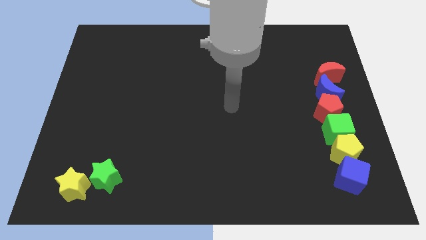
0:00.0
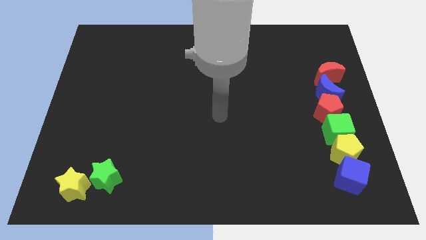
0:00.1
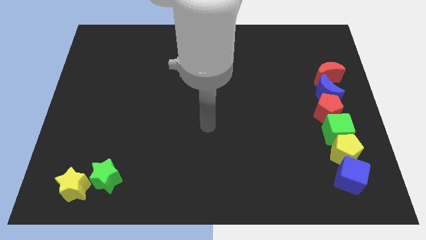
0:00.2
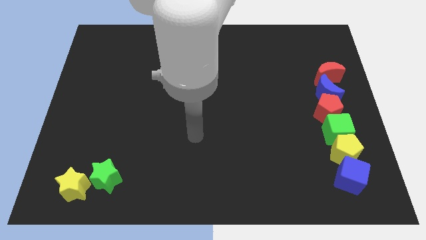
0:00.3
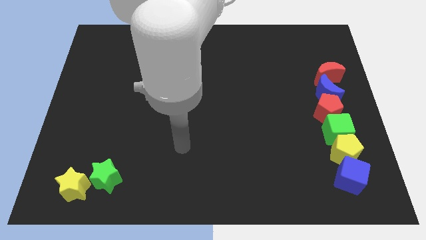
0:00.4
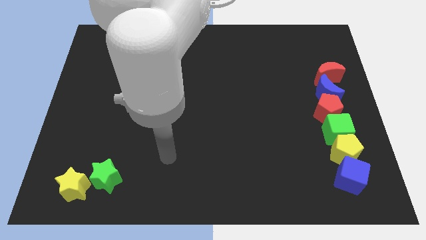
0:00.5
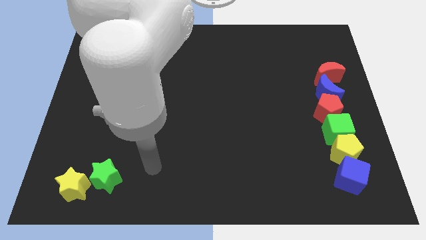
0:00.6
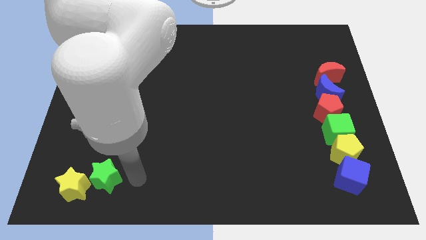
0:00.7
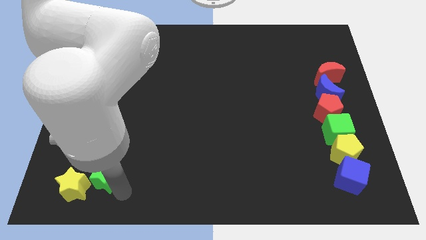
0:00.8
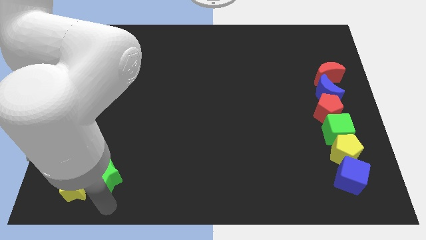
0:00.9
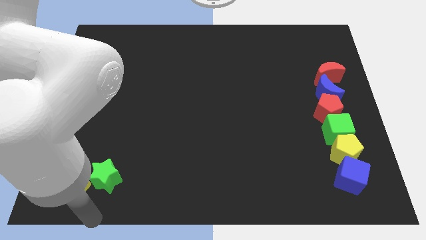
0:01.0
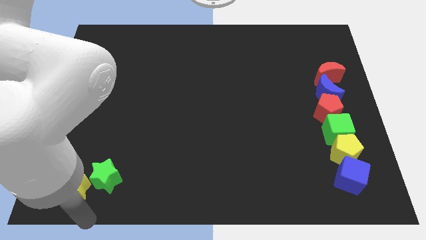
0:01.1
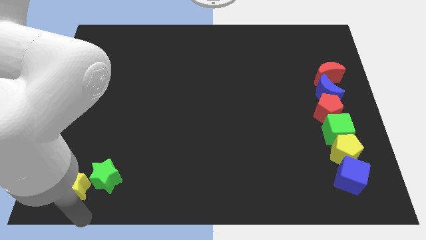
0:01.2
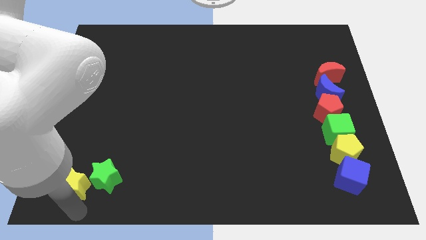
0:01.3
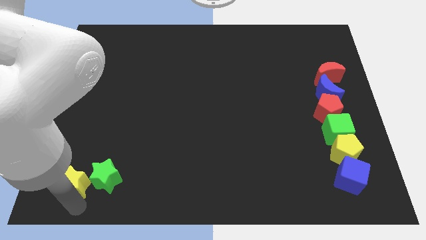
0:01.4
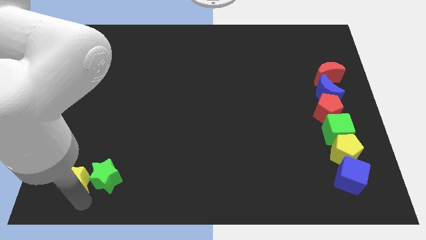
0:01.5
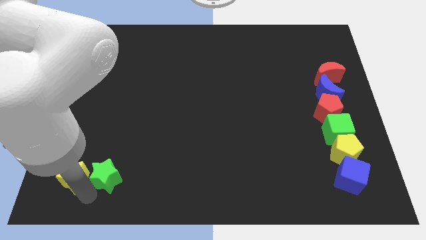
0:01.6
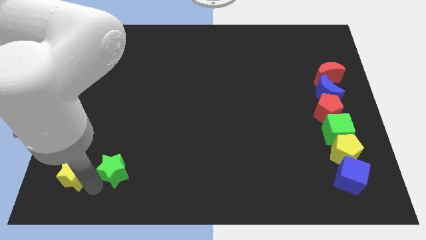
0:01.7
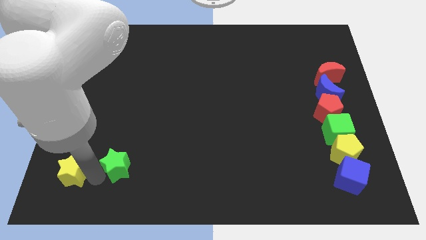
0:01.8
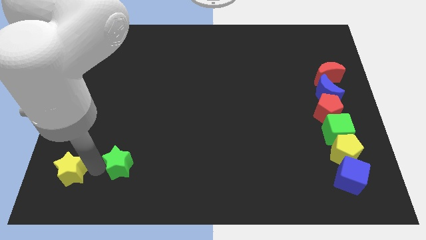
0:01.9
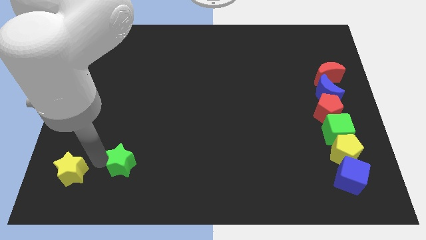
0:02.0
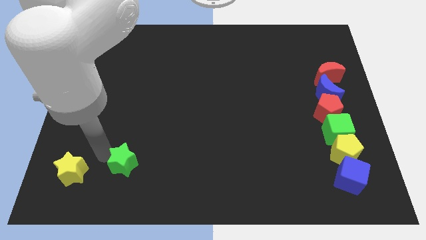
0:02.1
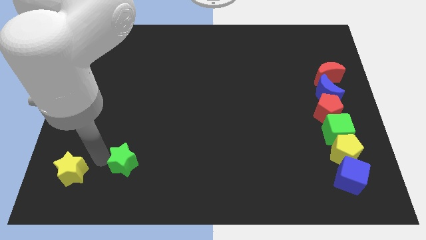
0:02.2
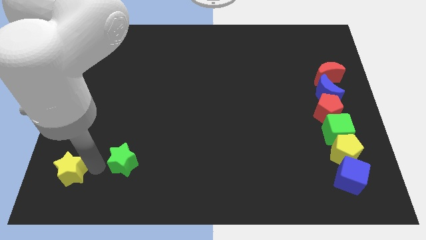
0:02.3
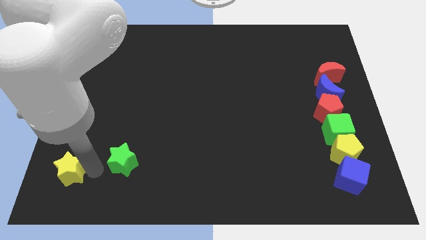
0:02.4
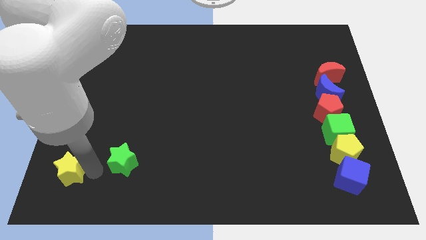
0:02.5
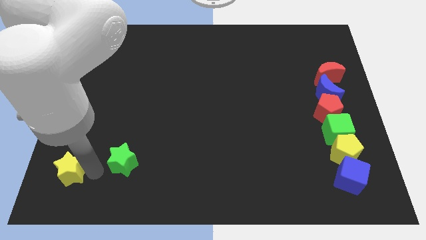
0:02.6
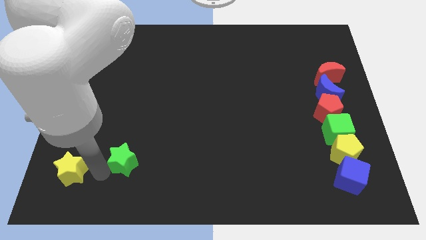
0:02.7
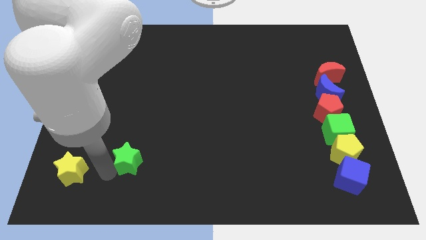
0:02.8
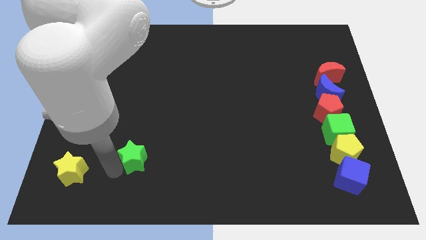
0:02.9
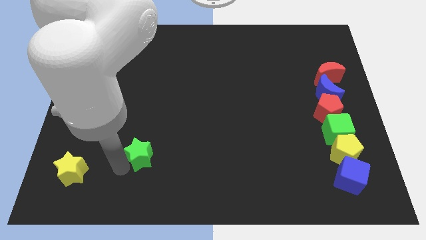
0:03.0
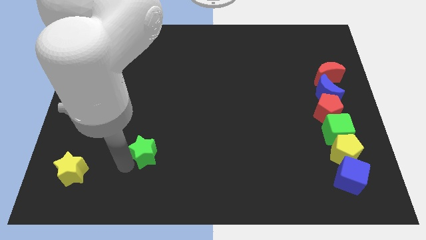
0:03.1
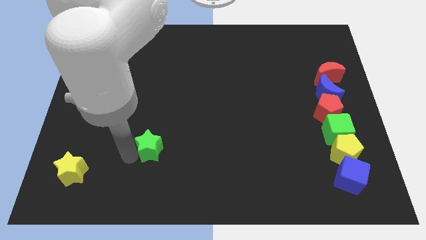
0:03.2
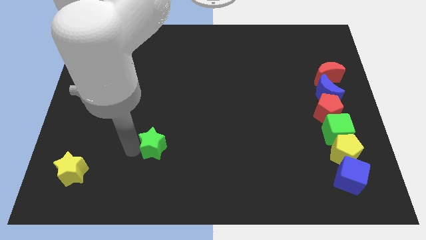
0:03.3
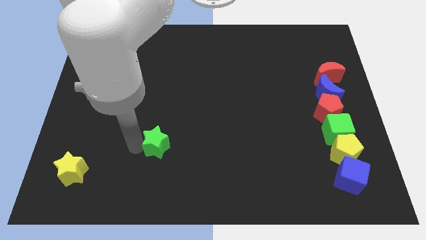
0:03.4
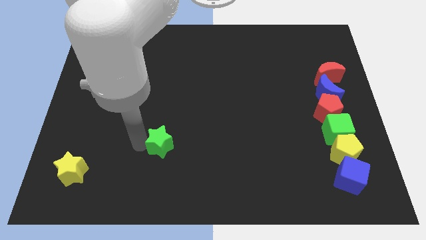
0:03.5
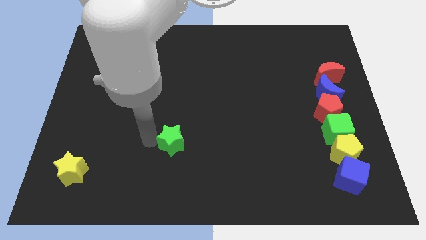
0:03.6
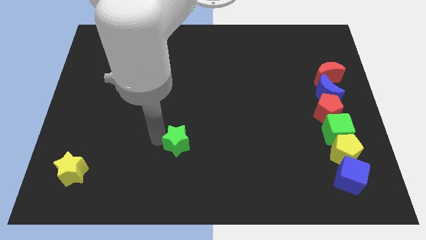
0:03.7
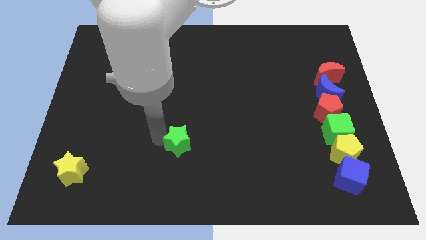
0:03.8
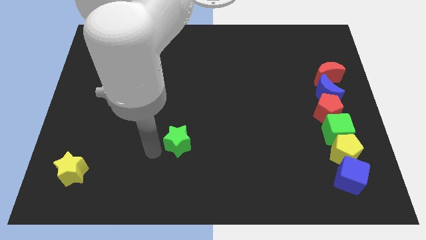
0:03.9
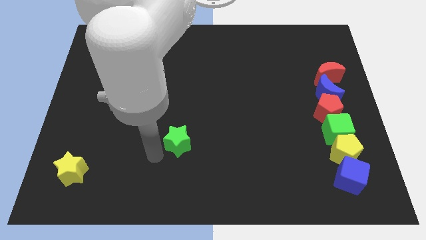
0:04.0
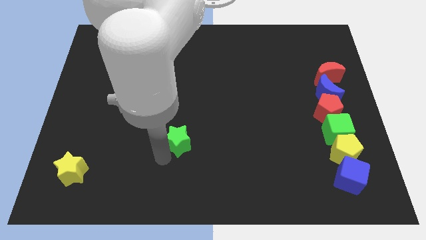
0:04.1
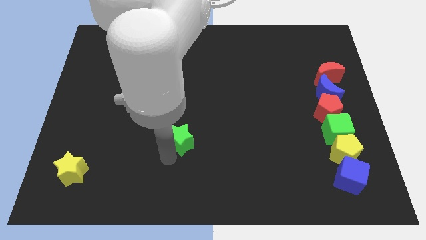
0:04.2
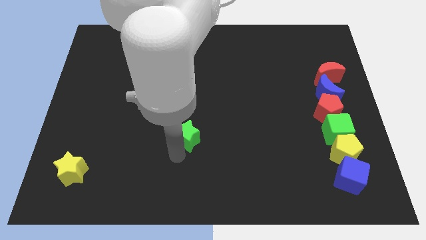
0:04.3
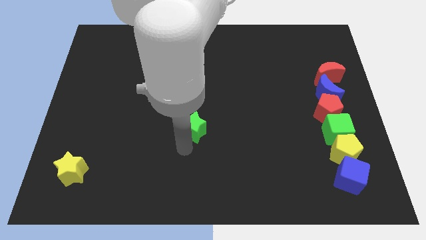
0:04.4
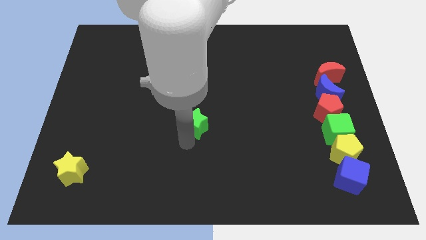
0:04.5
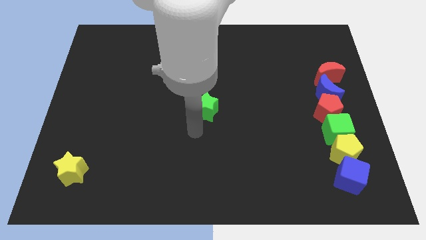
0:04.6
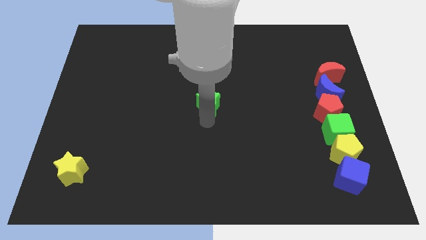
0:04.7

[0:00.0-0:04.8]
move green star to the middle of the board

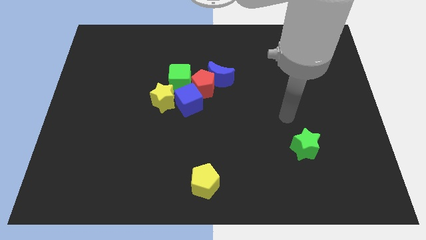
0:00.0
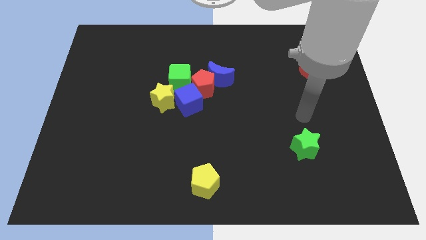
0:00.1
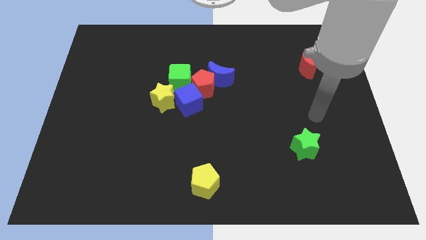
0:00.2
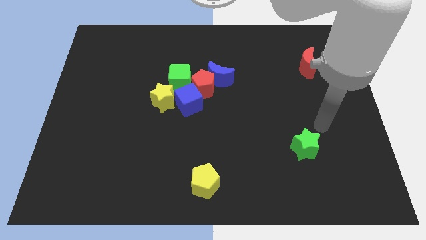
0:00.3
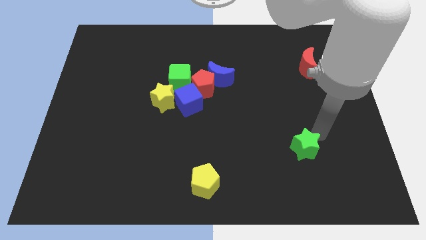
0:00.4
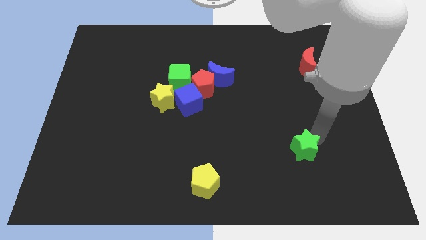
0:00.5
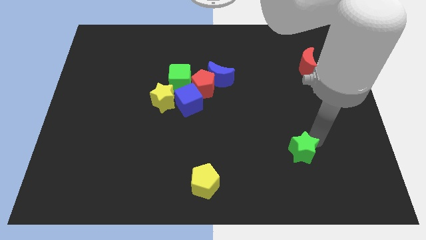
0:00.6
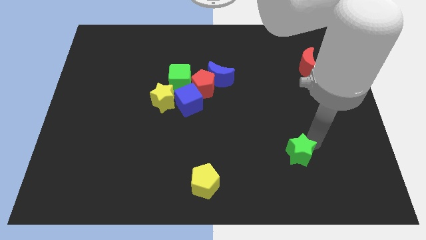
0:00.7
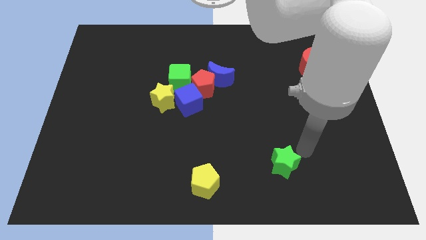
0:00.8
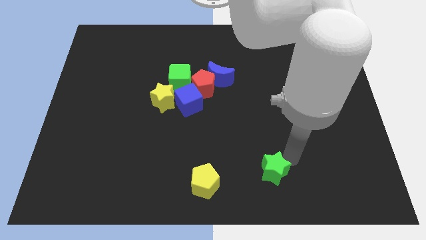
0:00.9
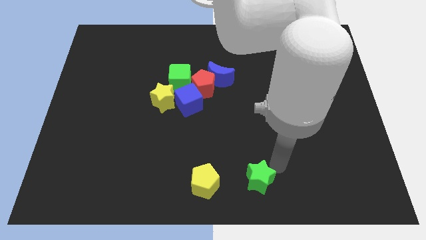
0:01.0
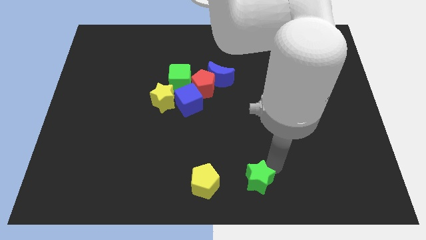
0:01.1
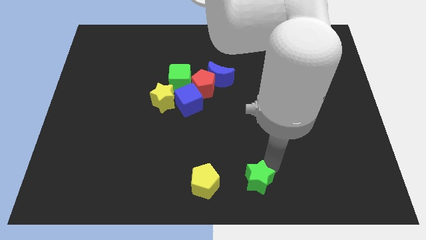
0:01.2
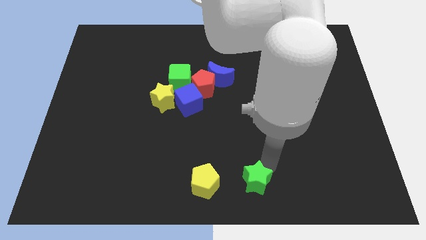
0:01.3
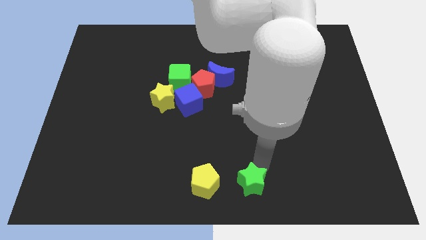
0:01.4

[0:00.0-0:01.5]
push the green star parallel to the yellow pentagon at the right side

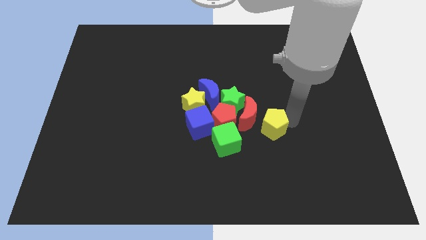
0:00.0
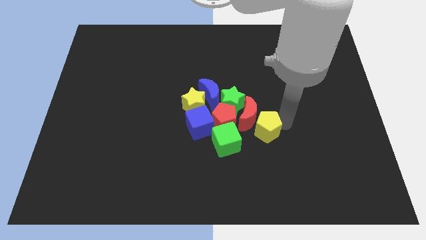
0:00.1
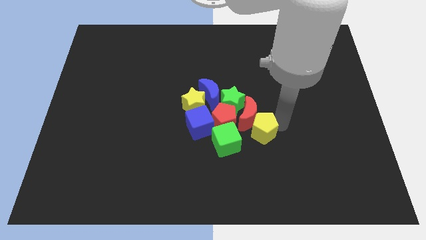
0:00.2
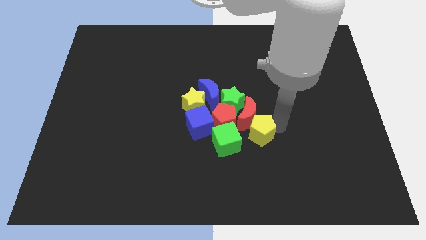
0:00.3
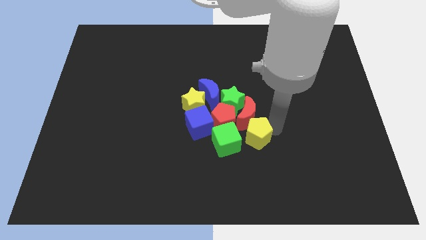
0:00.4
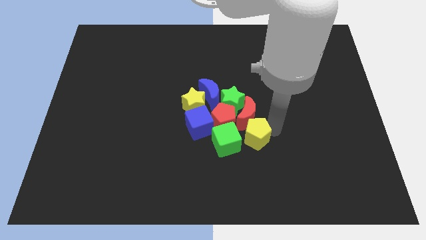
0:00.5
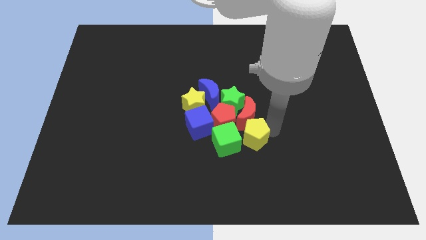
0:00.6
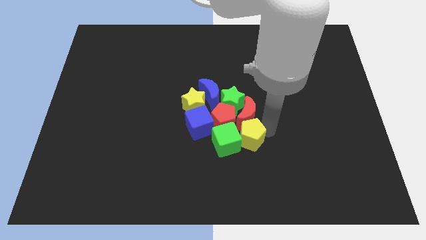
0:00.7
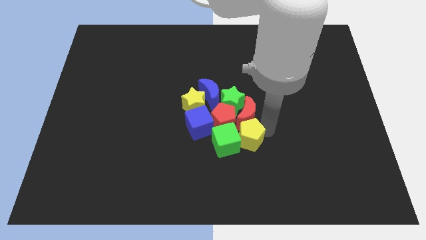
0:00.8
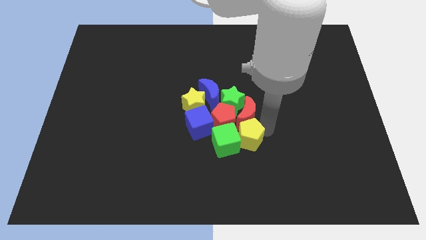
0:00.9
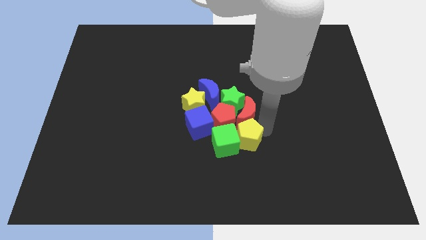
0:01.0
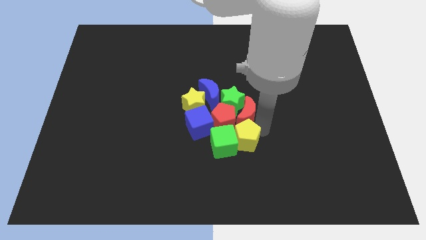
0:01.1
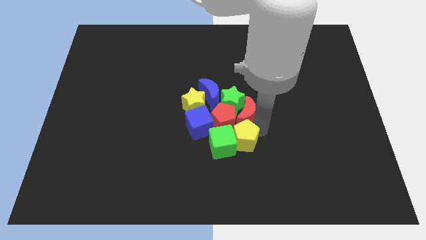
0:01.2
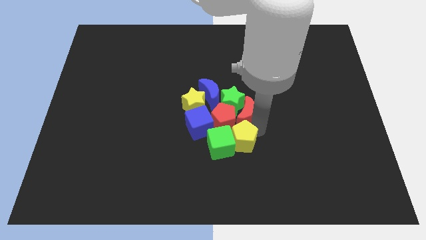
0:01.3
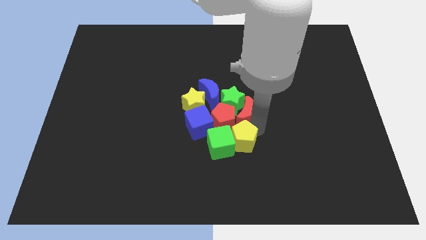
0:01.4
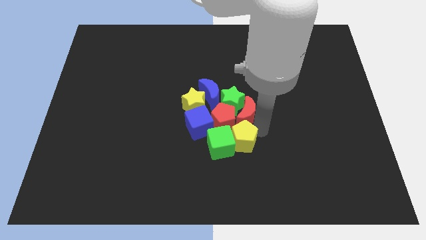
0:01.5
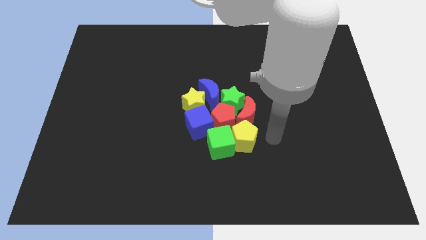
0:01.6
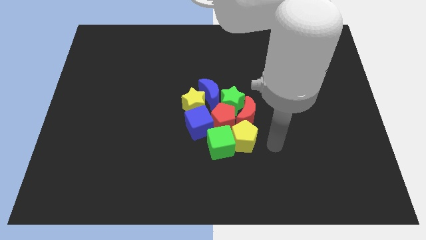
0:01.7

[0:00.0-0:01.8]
place the yellow pentagon right to the green cube

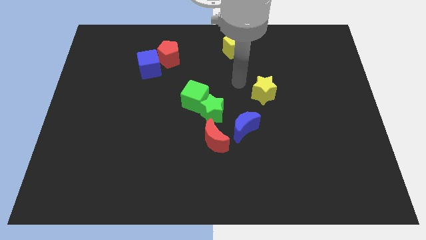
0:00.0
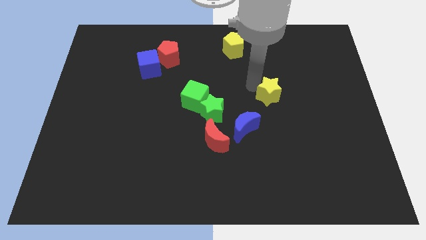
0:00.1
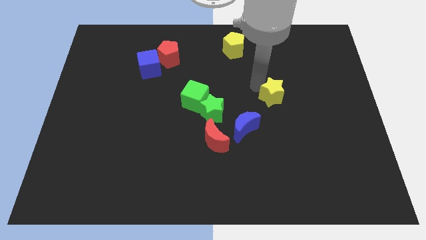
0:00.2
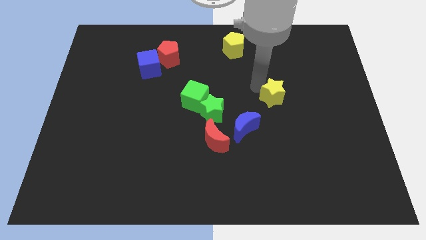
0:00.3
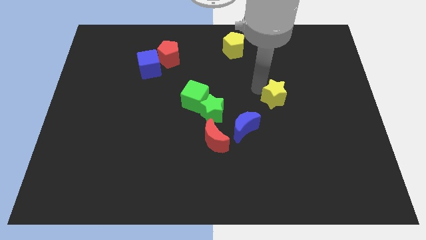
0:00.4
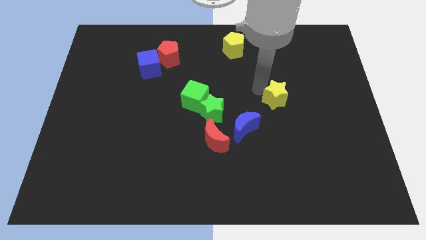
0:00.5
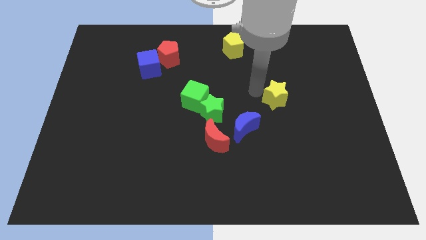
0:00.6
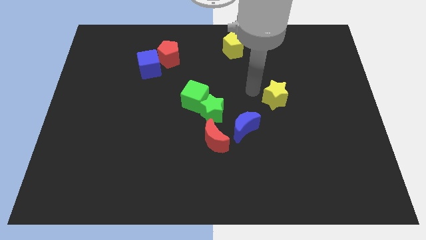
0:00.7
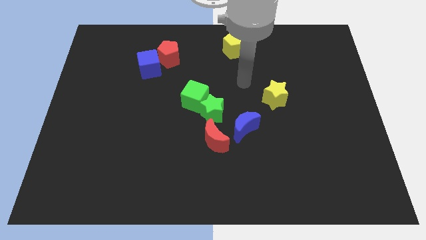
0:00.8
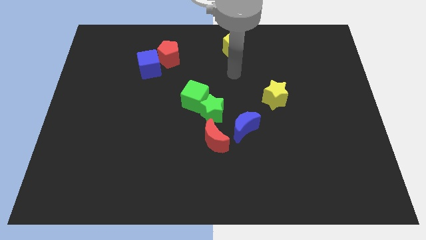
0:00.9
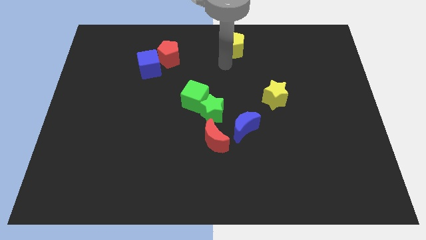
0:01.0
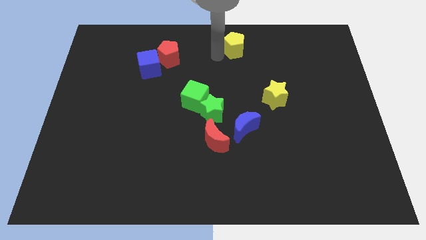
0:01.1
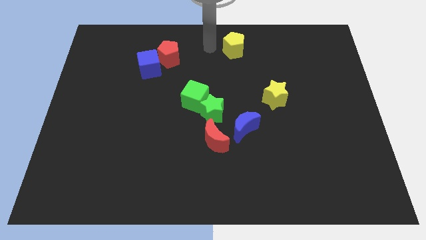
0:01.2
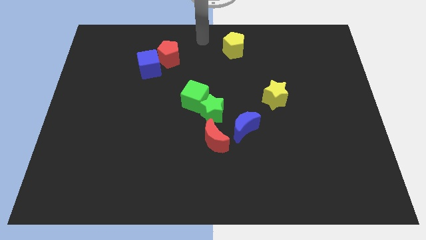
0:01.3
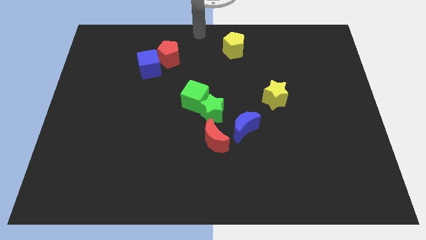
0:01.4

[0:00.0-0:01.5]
place the yellow star at the top right of the blue moon
